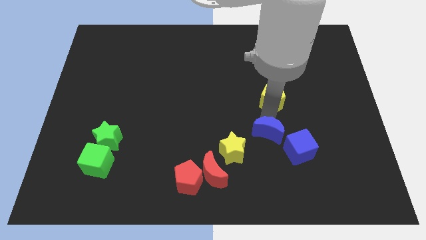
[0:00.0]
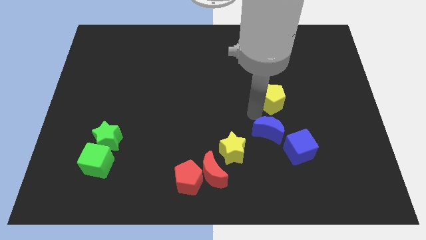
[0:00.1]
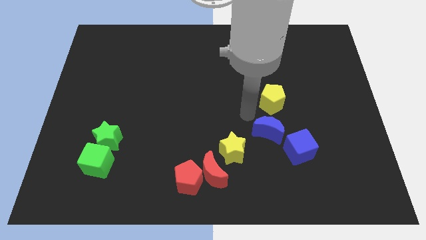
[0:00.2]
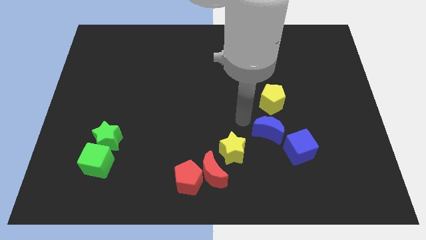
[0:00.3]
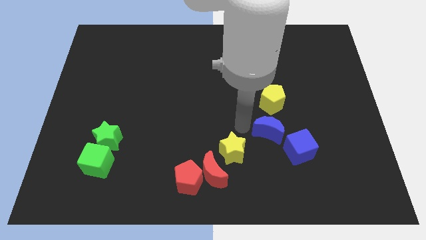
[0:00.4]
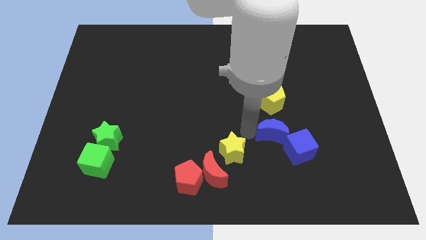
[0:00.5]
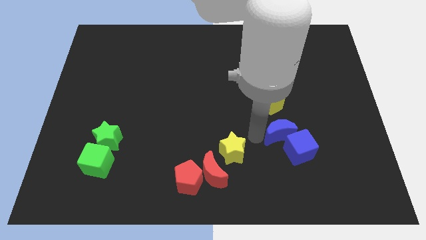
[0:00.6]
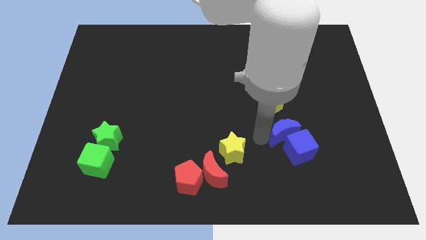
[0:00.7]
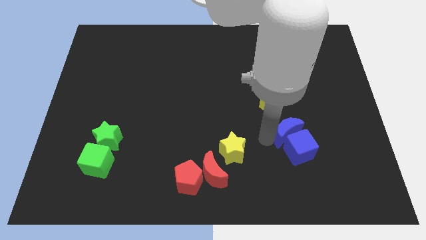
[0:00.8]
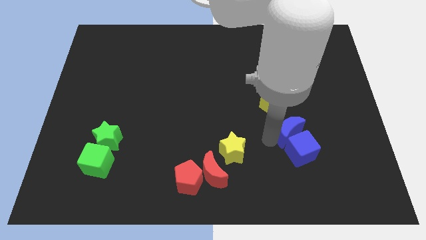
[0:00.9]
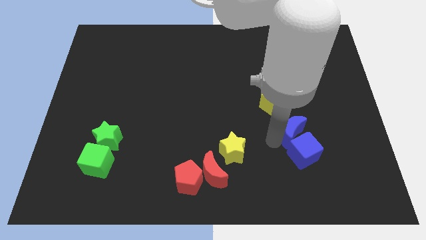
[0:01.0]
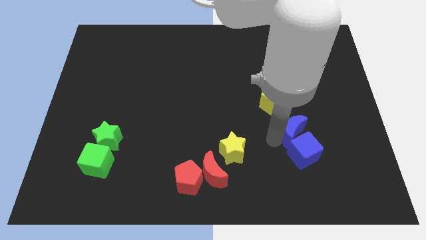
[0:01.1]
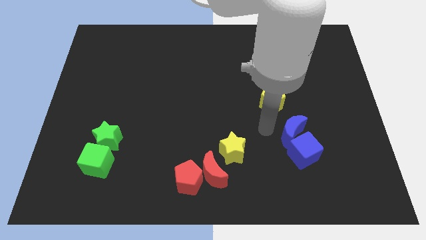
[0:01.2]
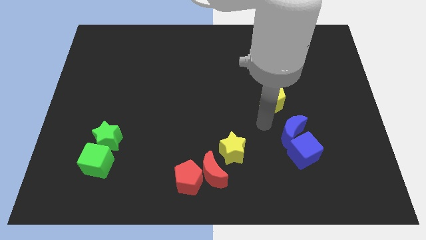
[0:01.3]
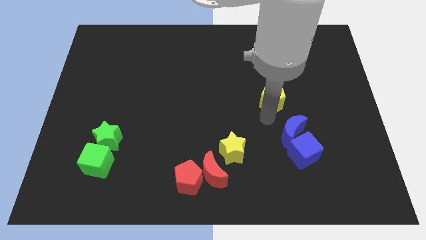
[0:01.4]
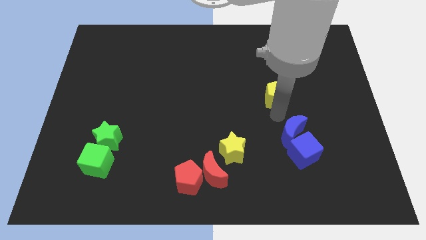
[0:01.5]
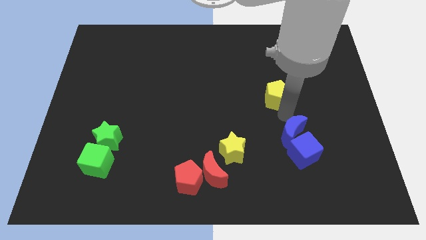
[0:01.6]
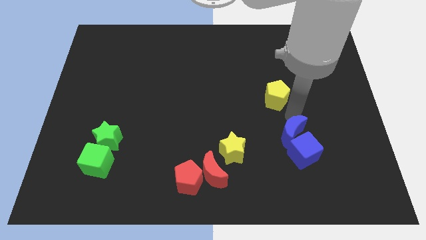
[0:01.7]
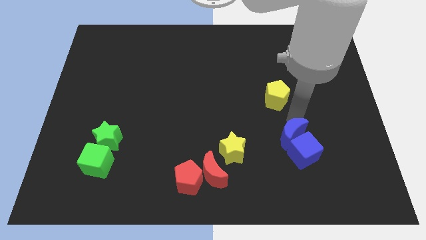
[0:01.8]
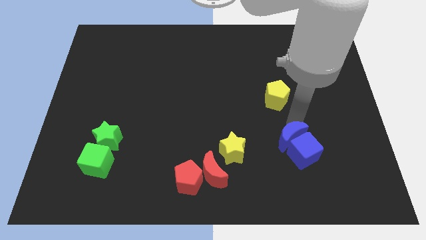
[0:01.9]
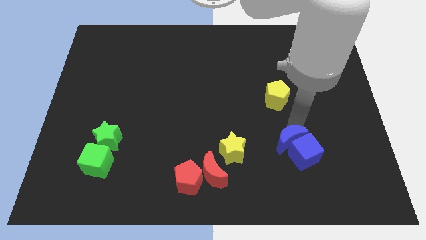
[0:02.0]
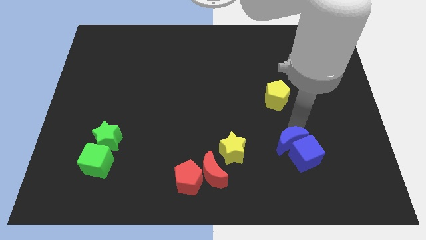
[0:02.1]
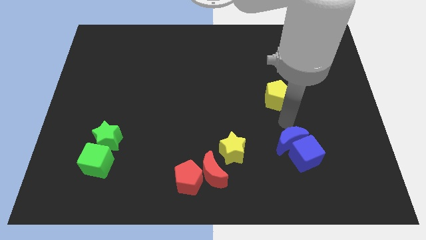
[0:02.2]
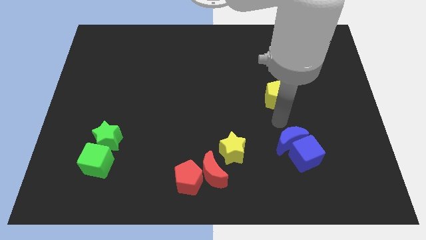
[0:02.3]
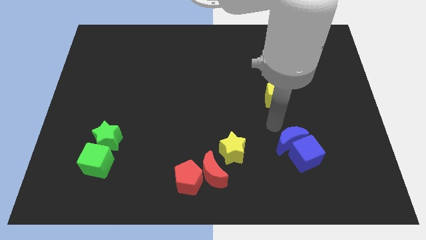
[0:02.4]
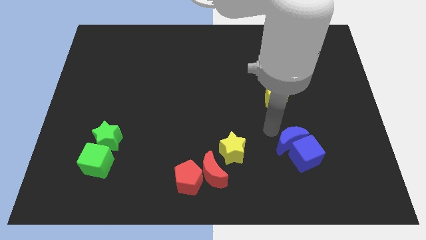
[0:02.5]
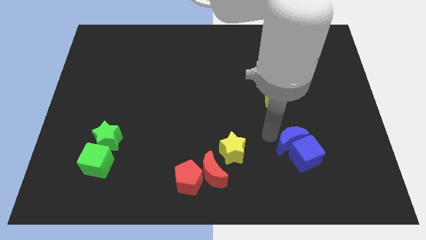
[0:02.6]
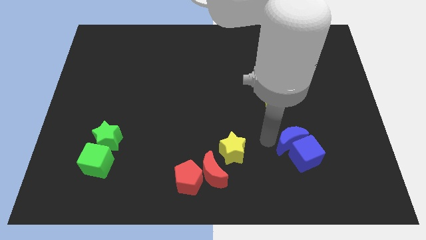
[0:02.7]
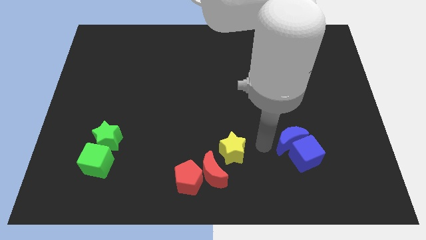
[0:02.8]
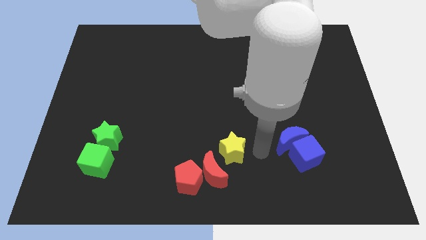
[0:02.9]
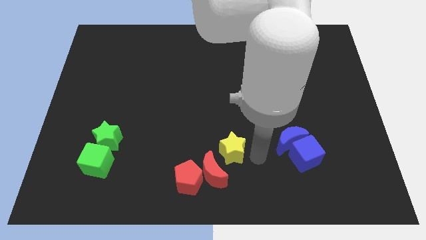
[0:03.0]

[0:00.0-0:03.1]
push the blue moon into the blue cube

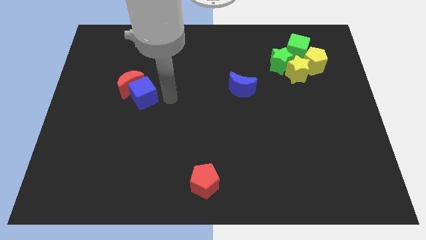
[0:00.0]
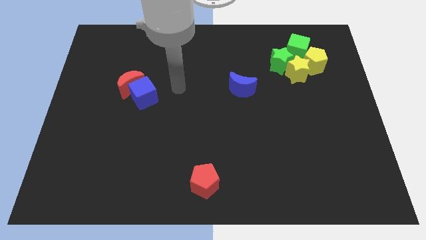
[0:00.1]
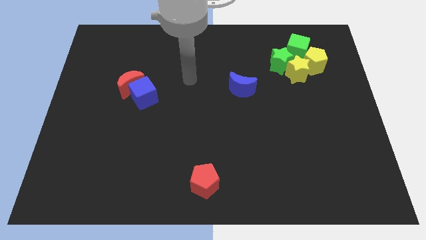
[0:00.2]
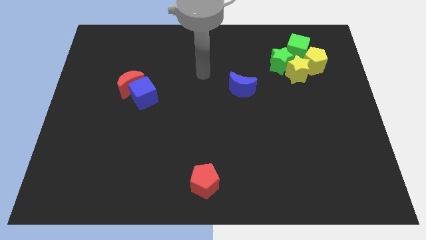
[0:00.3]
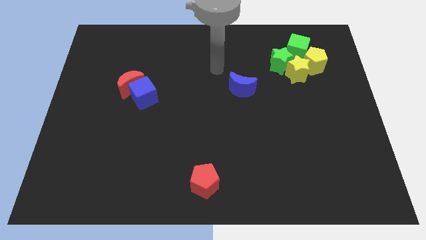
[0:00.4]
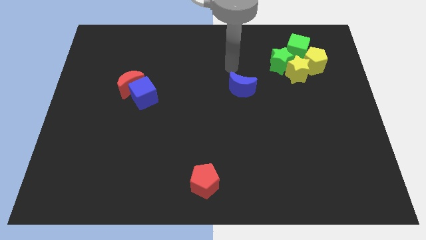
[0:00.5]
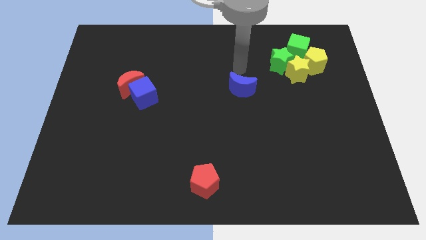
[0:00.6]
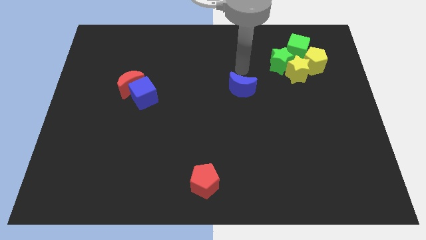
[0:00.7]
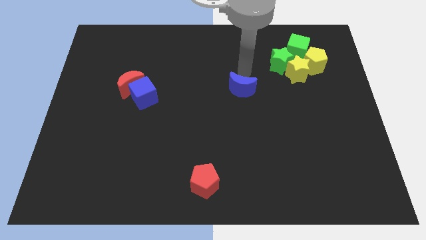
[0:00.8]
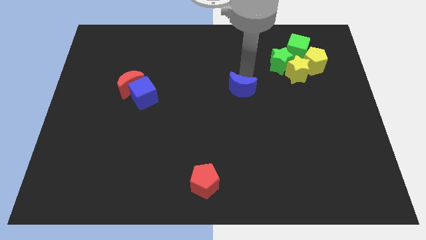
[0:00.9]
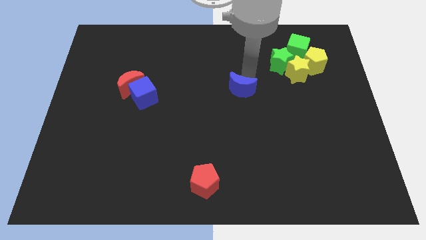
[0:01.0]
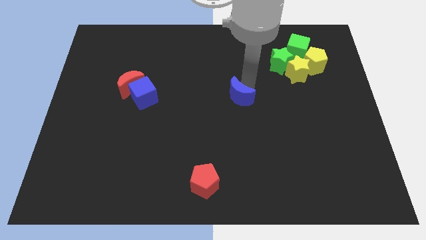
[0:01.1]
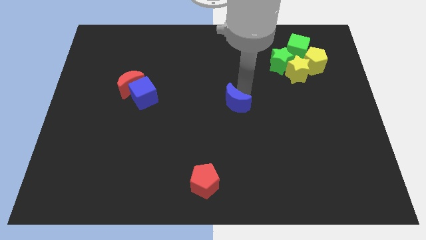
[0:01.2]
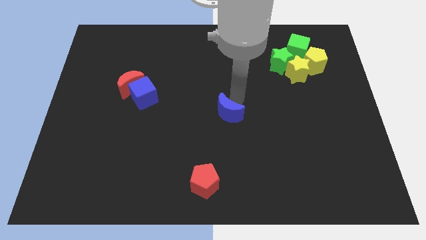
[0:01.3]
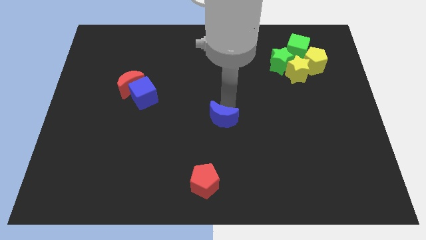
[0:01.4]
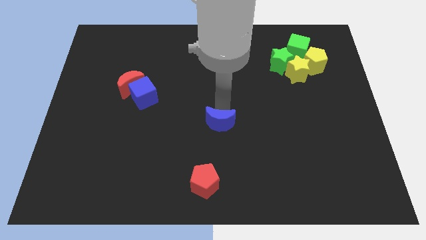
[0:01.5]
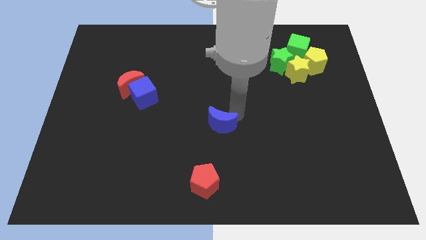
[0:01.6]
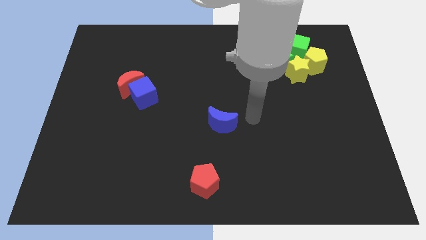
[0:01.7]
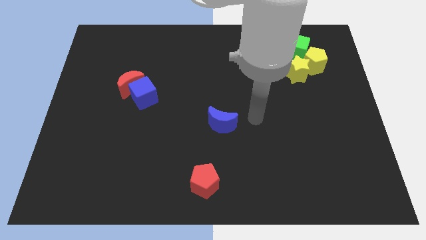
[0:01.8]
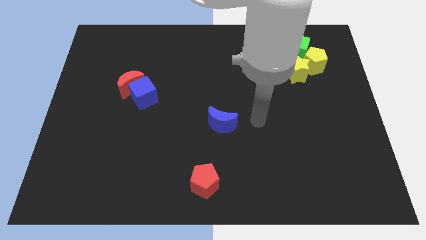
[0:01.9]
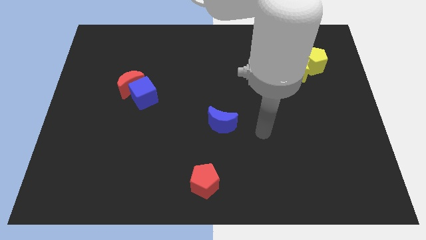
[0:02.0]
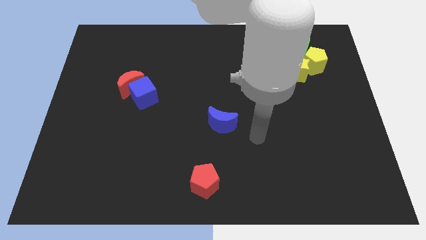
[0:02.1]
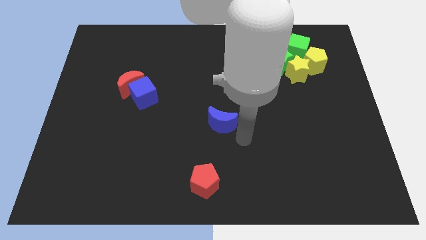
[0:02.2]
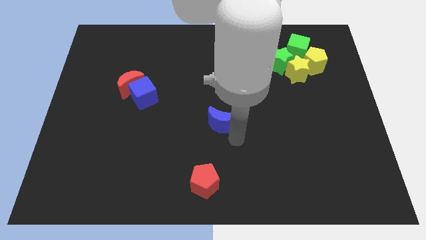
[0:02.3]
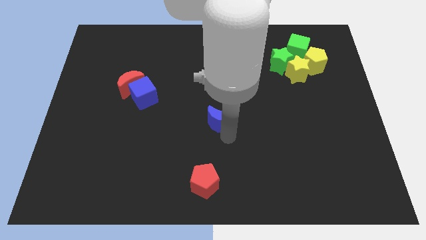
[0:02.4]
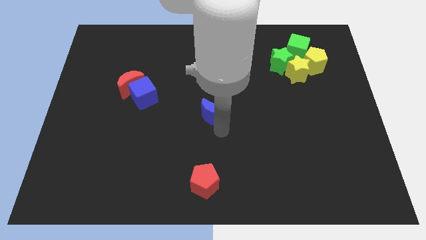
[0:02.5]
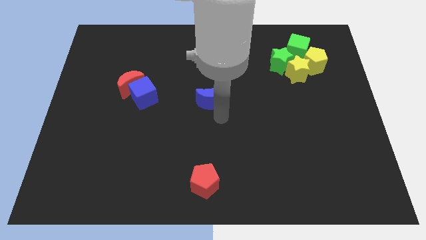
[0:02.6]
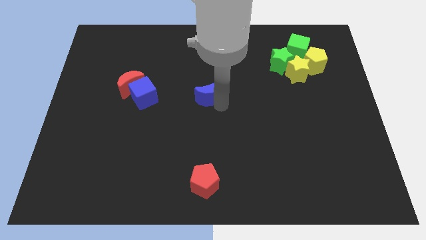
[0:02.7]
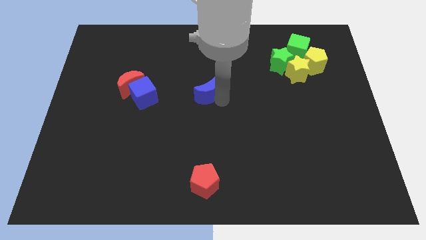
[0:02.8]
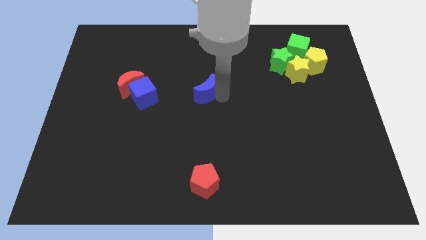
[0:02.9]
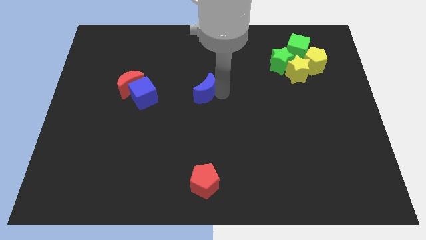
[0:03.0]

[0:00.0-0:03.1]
place the blue crescent at the center of the board

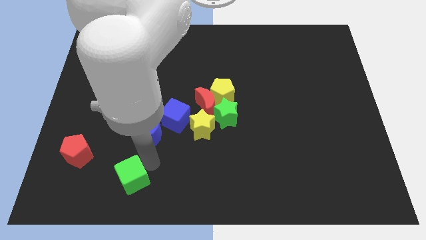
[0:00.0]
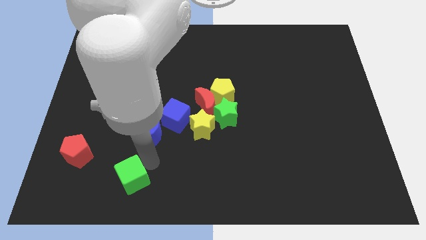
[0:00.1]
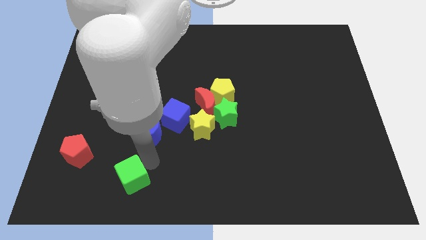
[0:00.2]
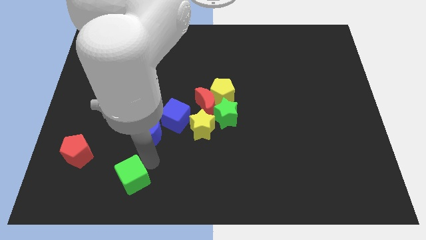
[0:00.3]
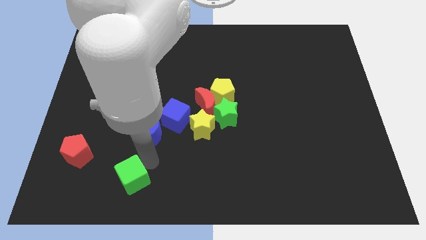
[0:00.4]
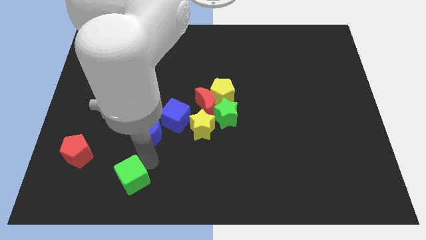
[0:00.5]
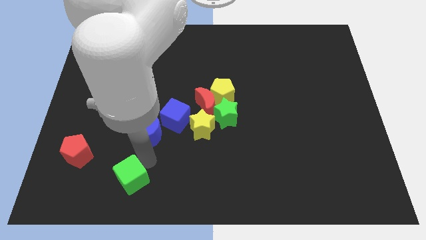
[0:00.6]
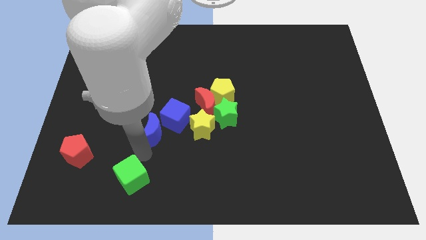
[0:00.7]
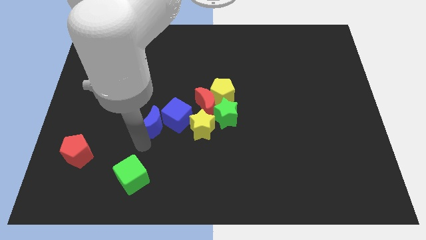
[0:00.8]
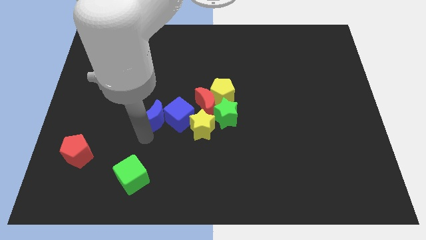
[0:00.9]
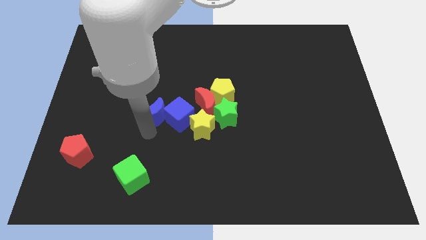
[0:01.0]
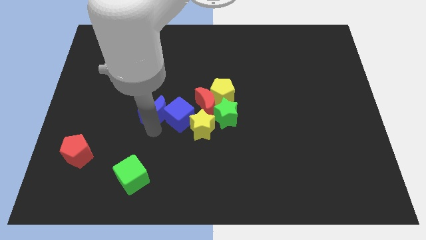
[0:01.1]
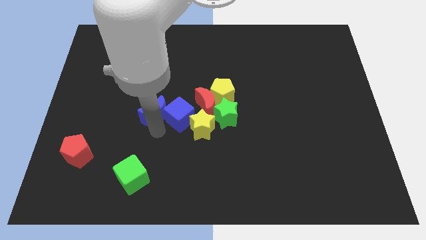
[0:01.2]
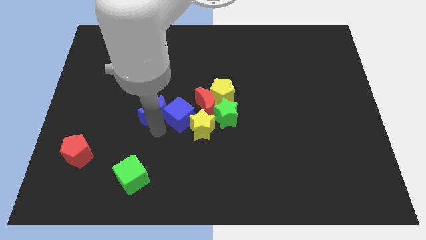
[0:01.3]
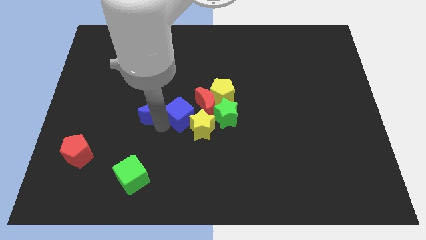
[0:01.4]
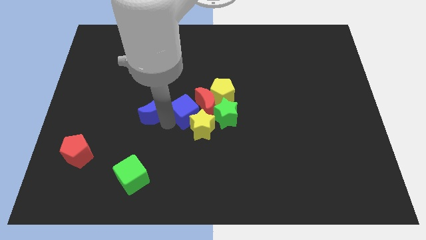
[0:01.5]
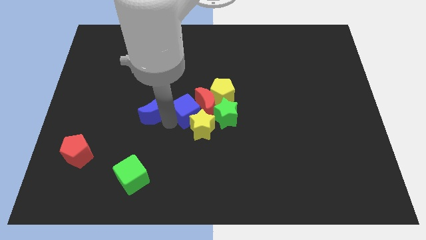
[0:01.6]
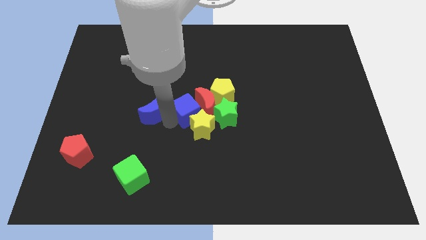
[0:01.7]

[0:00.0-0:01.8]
push the blue crescent towards the left of the blue cube

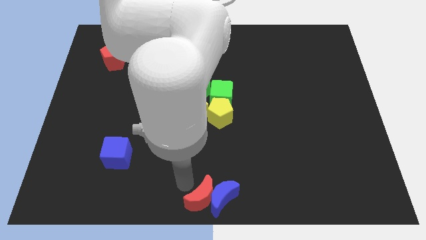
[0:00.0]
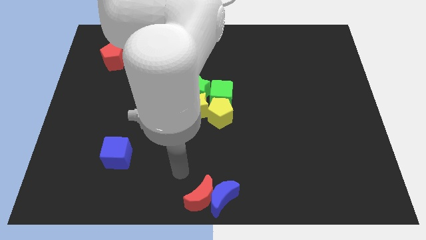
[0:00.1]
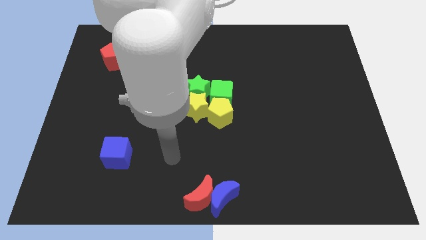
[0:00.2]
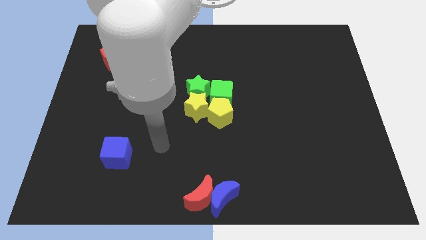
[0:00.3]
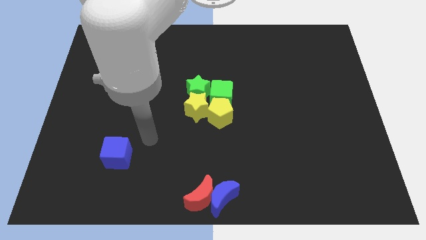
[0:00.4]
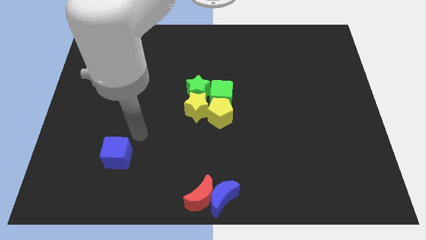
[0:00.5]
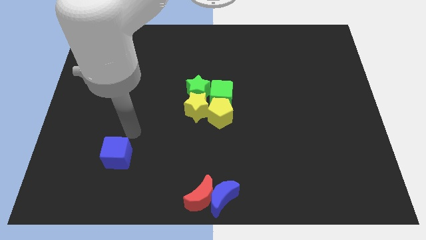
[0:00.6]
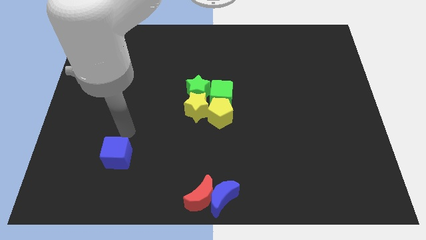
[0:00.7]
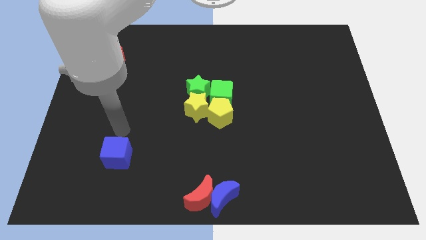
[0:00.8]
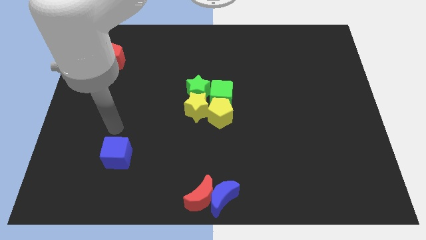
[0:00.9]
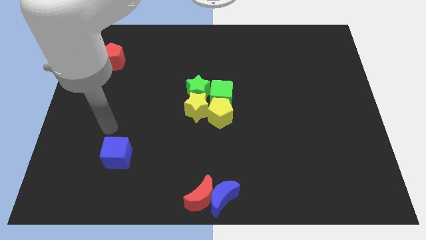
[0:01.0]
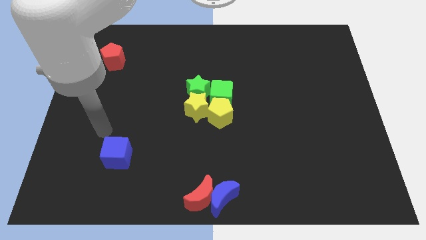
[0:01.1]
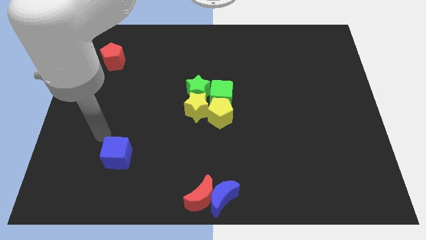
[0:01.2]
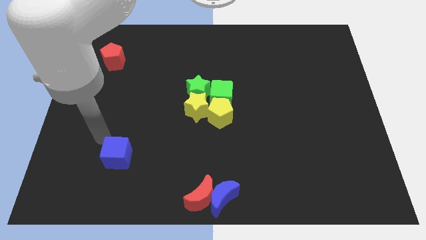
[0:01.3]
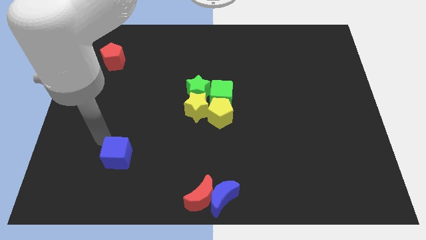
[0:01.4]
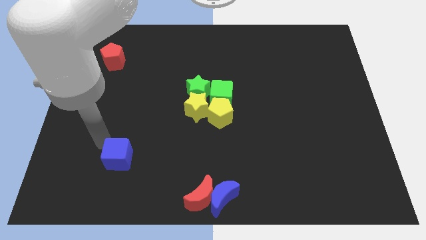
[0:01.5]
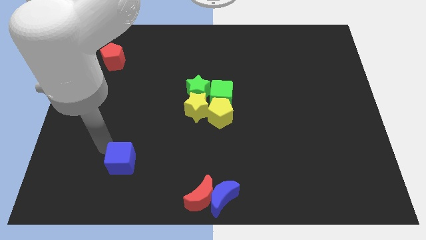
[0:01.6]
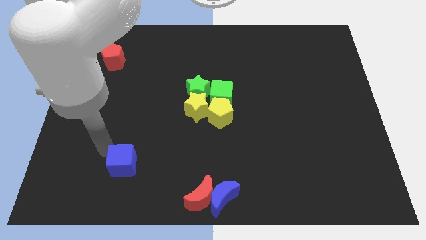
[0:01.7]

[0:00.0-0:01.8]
move the blue cube slightly to the bottom
